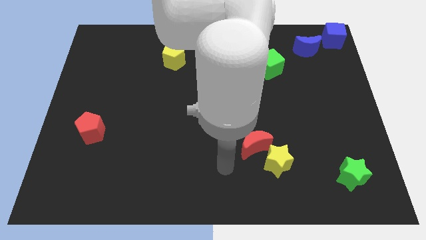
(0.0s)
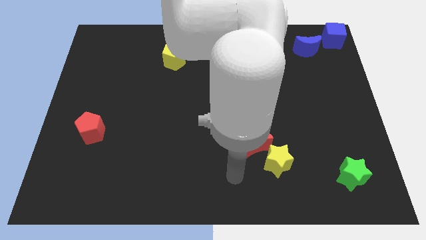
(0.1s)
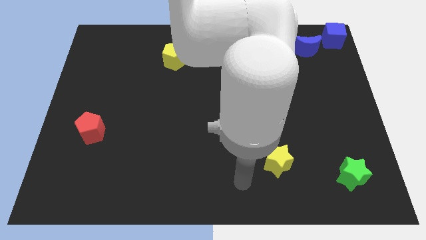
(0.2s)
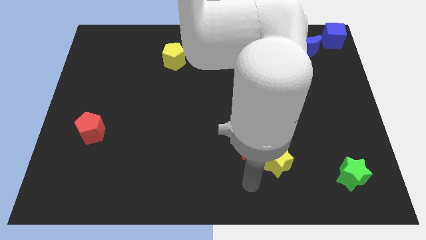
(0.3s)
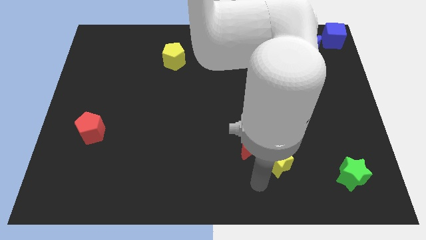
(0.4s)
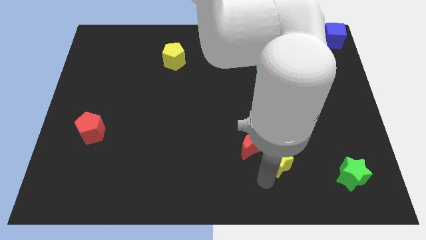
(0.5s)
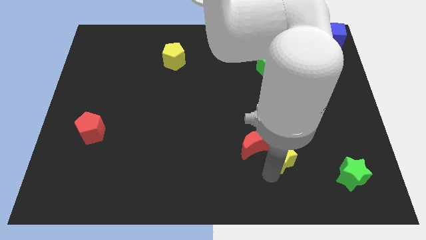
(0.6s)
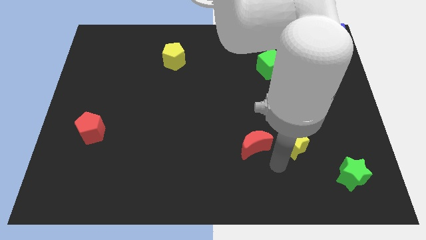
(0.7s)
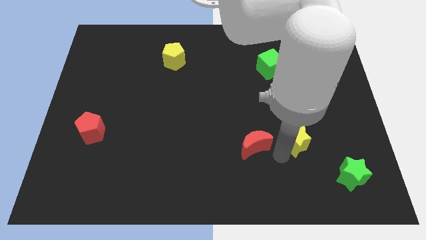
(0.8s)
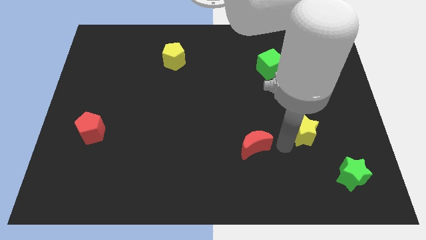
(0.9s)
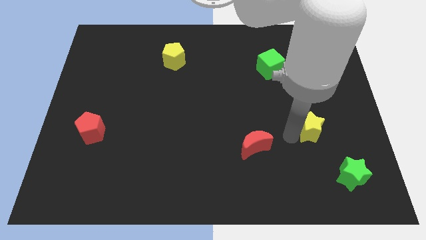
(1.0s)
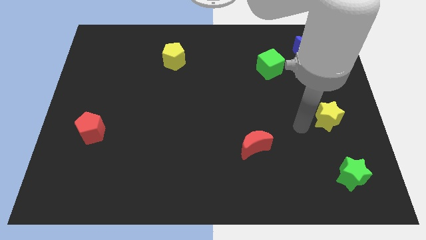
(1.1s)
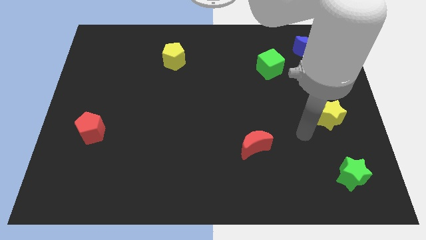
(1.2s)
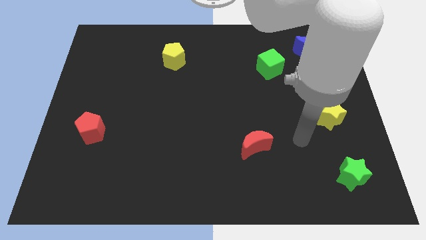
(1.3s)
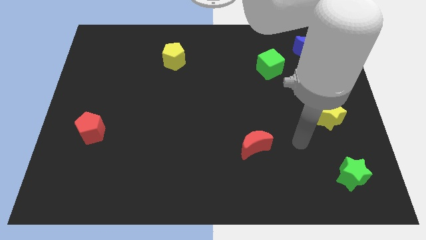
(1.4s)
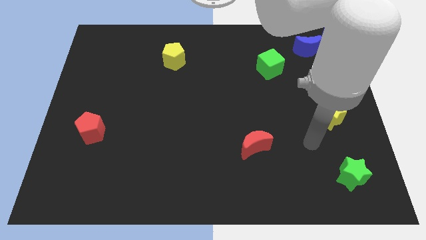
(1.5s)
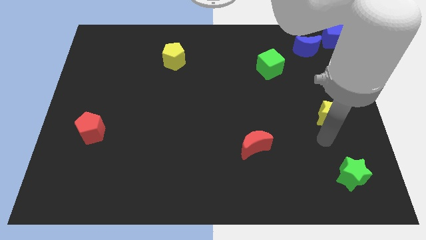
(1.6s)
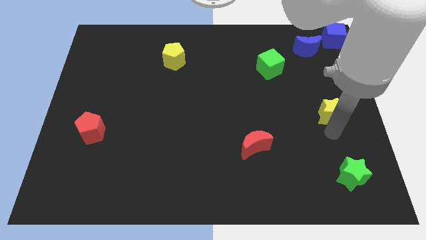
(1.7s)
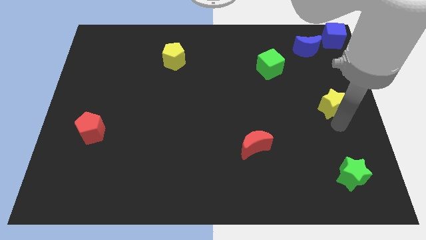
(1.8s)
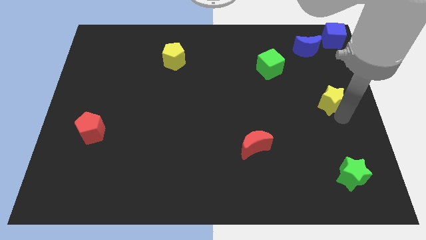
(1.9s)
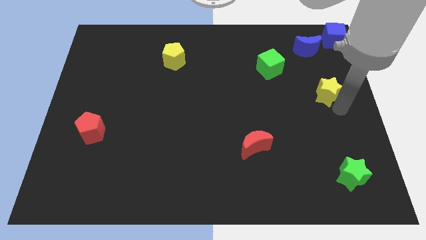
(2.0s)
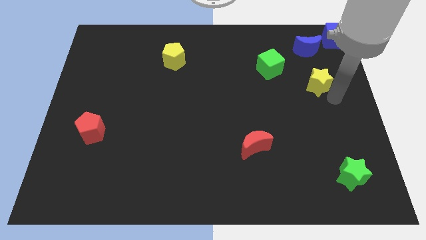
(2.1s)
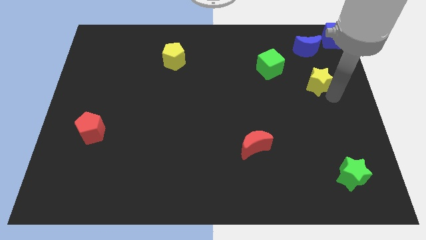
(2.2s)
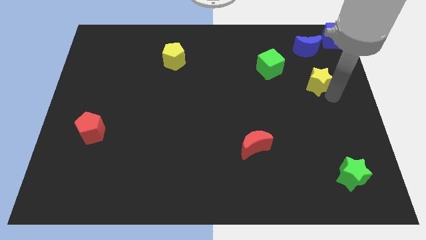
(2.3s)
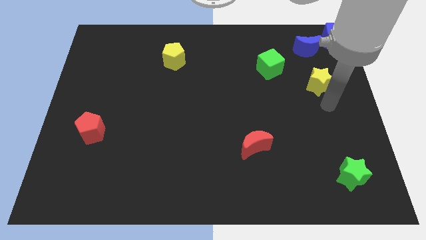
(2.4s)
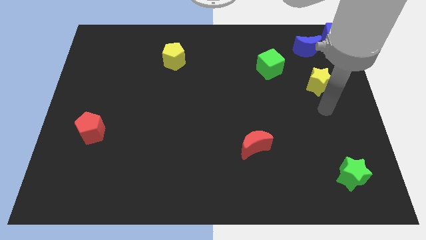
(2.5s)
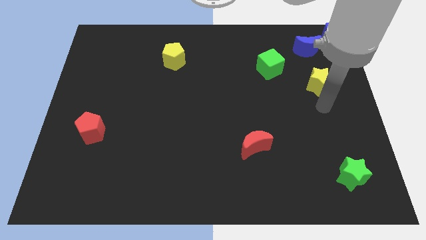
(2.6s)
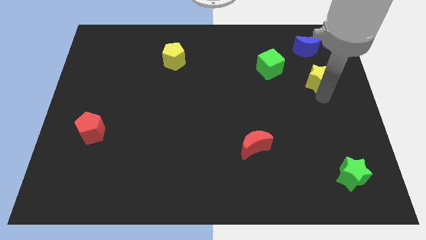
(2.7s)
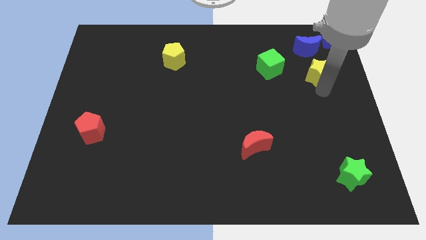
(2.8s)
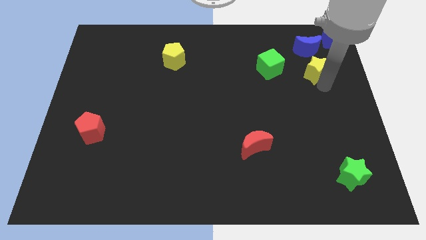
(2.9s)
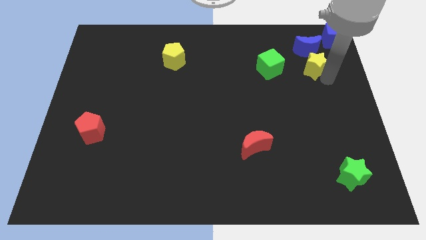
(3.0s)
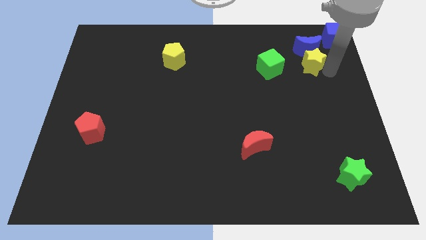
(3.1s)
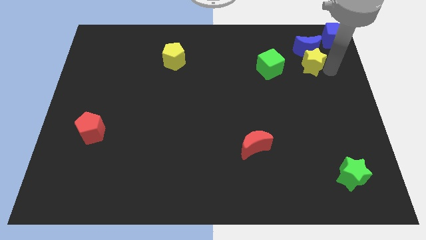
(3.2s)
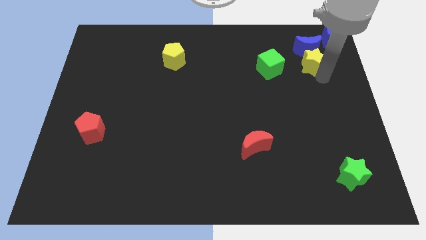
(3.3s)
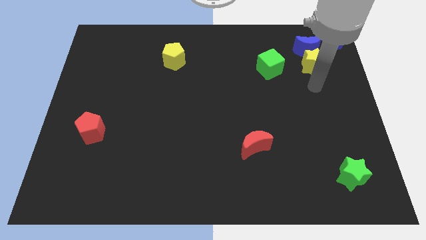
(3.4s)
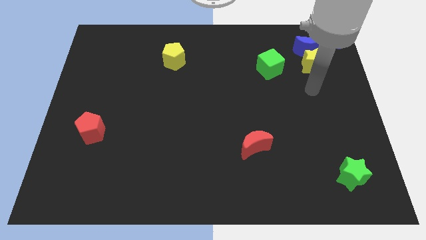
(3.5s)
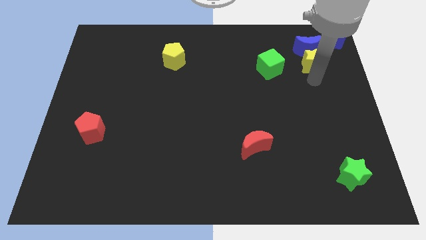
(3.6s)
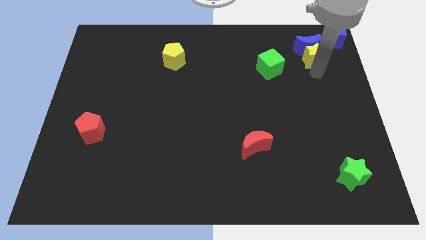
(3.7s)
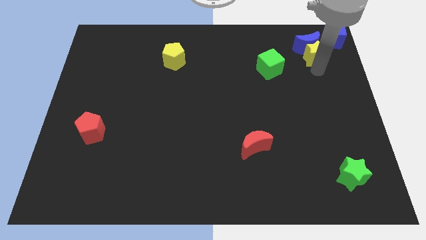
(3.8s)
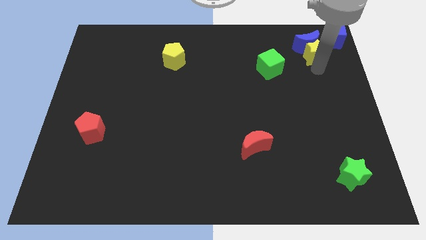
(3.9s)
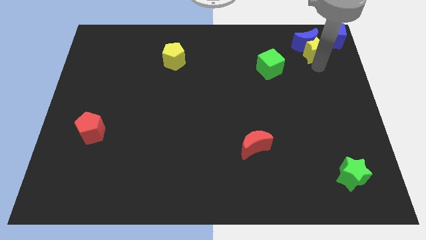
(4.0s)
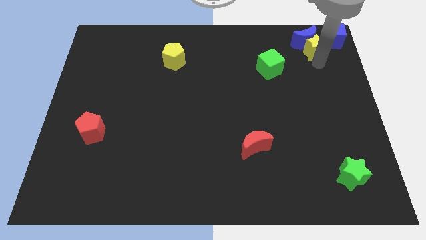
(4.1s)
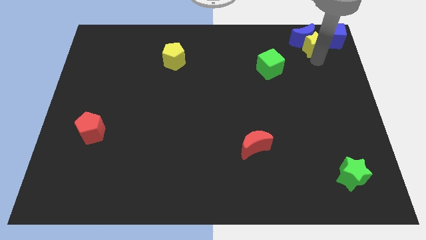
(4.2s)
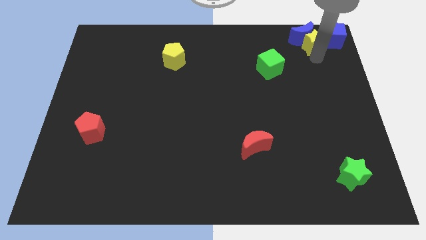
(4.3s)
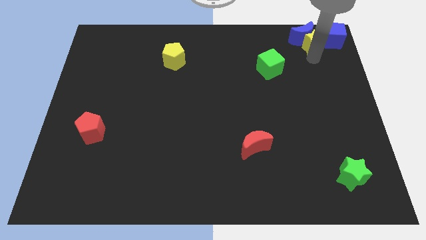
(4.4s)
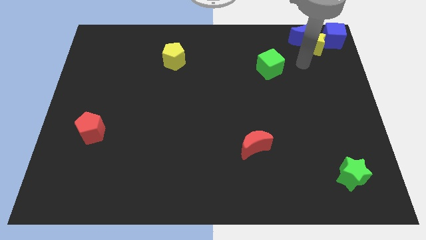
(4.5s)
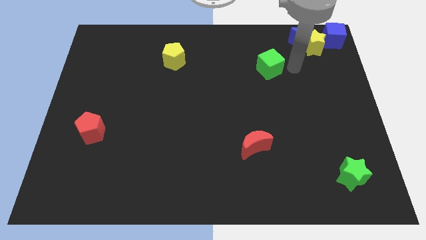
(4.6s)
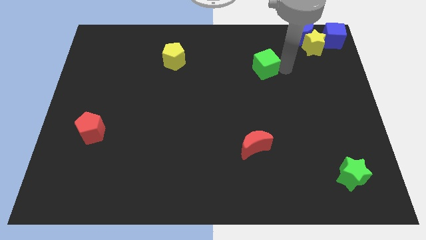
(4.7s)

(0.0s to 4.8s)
push the yellow star into the blue crescent

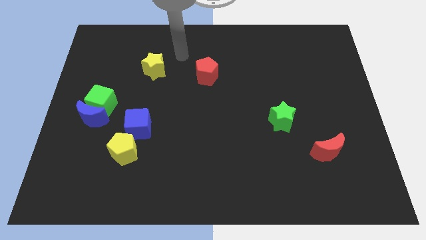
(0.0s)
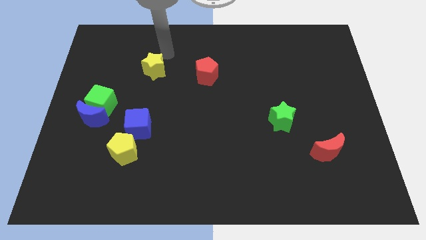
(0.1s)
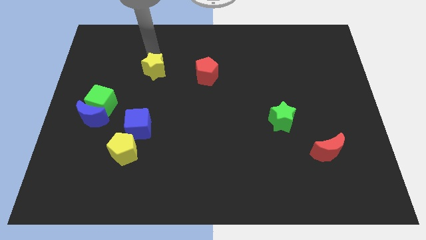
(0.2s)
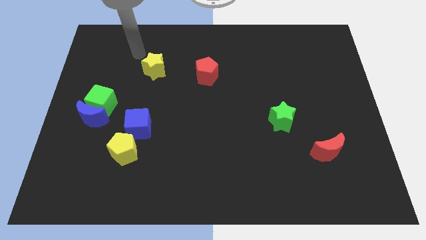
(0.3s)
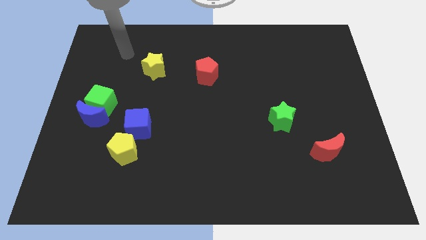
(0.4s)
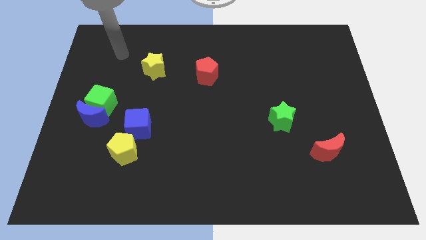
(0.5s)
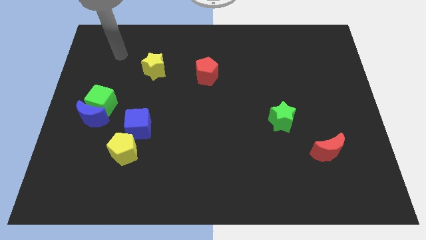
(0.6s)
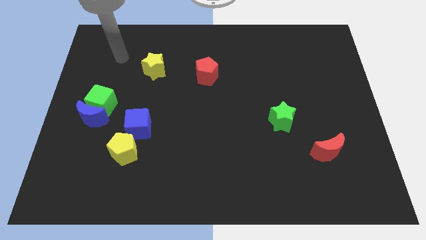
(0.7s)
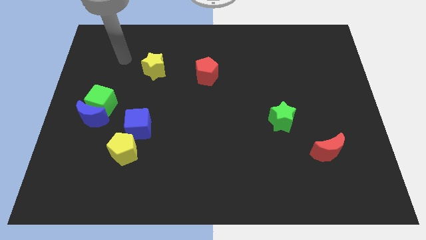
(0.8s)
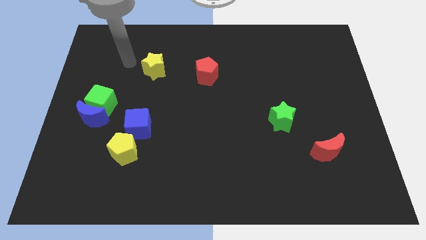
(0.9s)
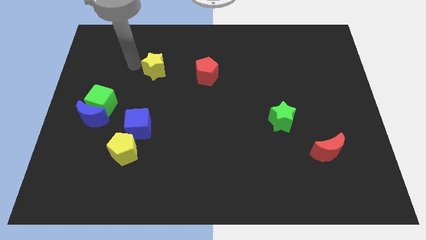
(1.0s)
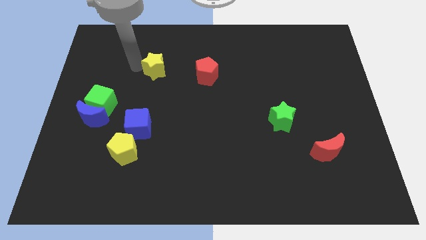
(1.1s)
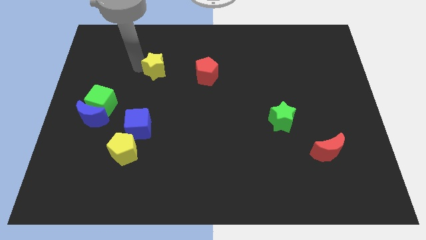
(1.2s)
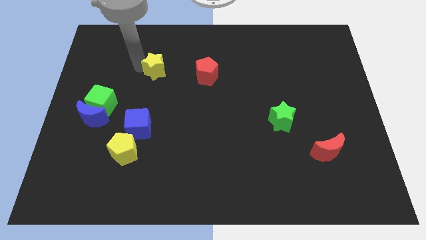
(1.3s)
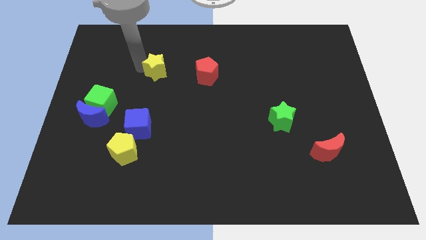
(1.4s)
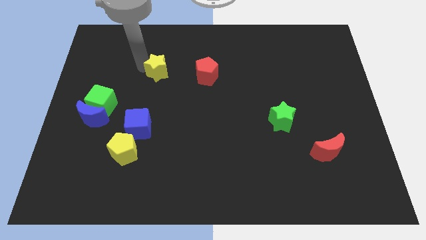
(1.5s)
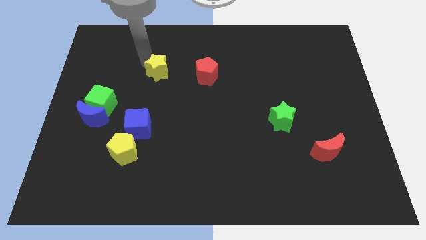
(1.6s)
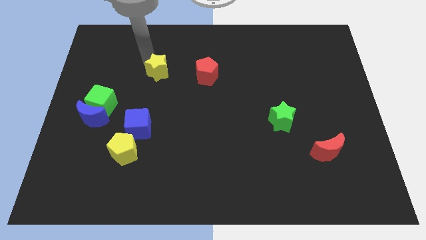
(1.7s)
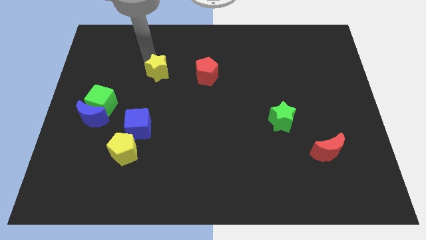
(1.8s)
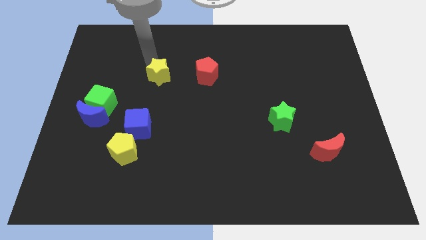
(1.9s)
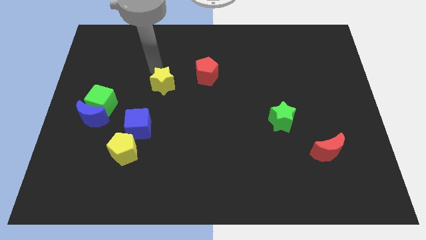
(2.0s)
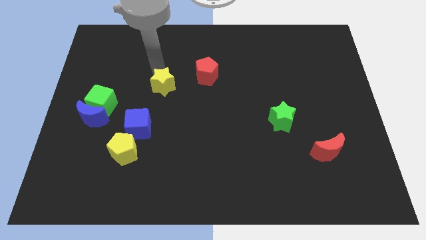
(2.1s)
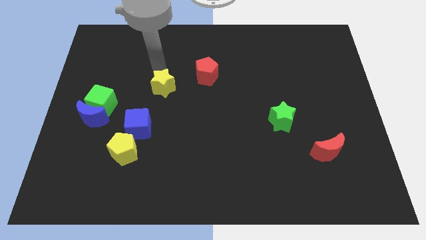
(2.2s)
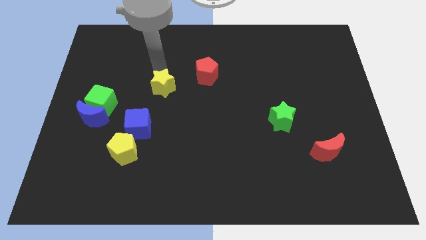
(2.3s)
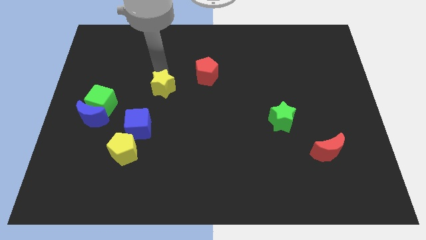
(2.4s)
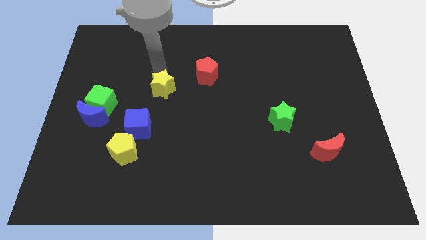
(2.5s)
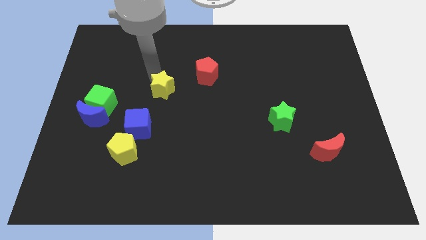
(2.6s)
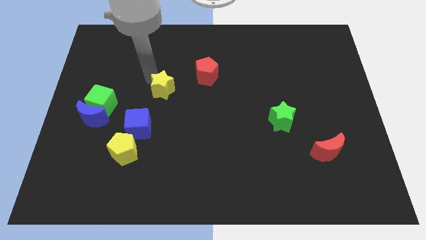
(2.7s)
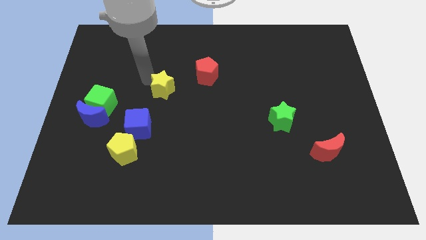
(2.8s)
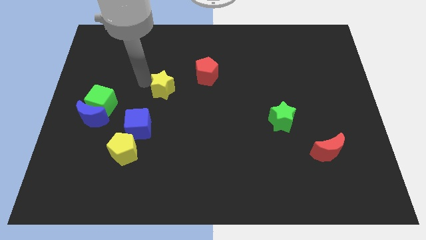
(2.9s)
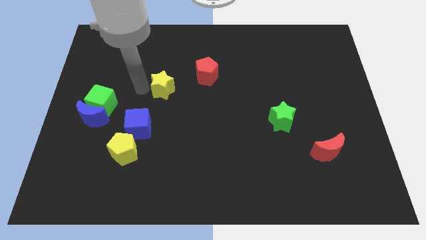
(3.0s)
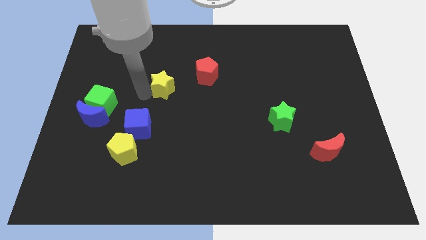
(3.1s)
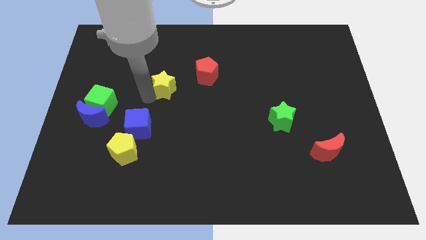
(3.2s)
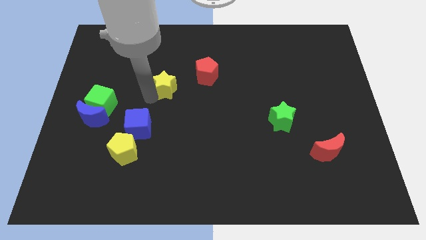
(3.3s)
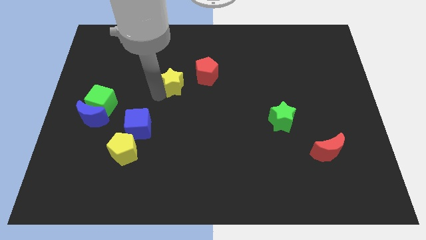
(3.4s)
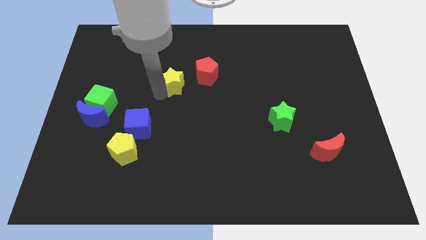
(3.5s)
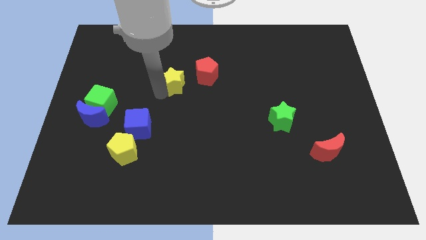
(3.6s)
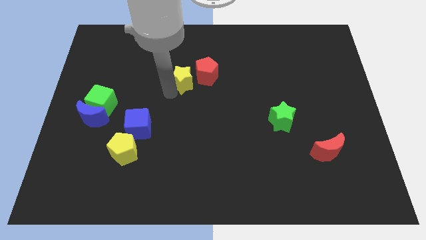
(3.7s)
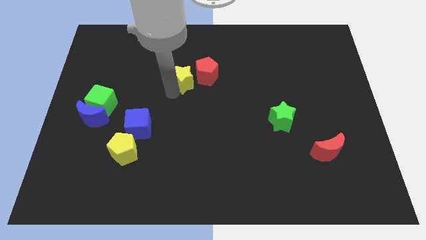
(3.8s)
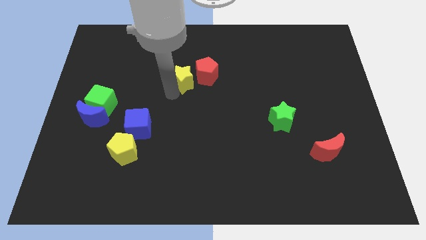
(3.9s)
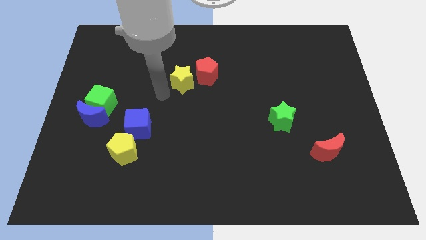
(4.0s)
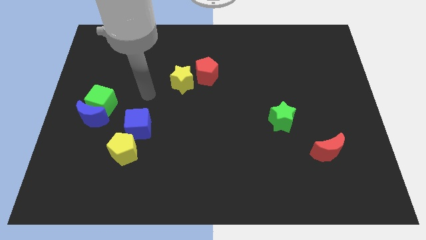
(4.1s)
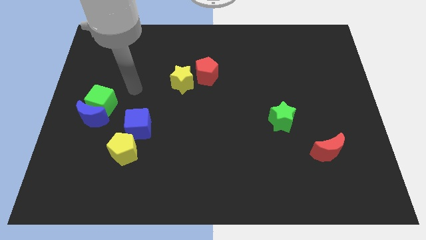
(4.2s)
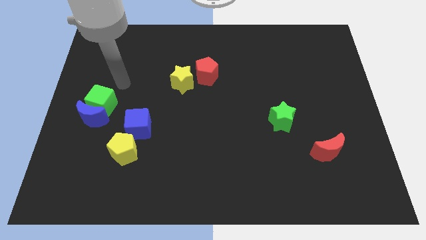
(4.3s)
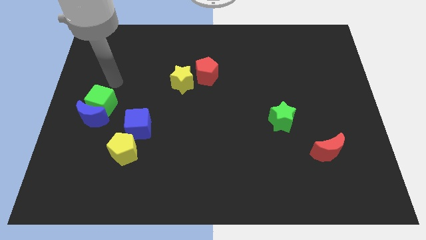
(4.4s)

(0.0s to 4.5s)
place the yellow star close to the red pentagon
